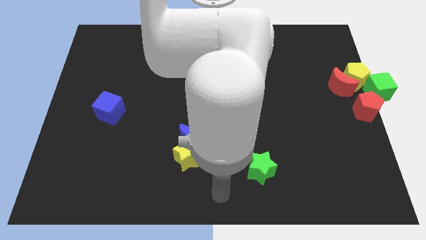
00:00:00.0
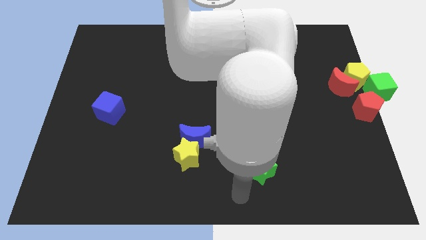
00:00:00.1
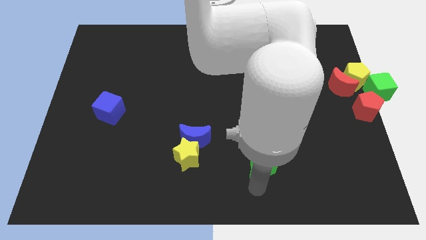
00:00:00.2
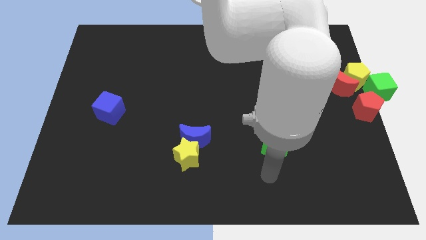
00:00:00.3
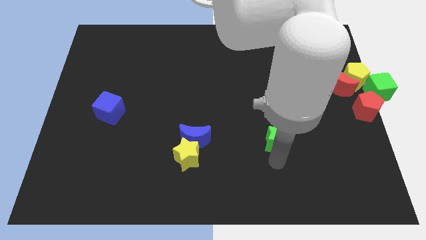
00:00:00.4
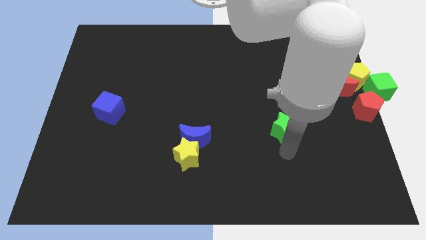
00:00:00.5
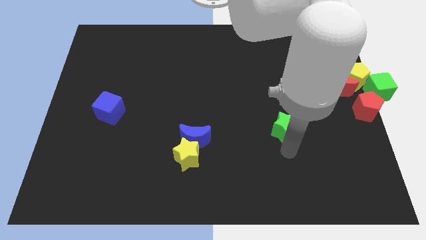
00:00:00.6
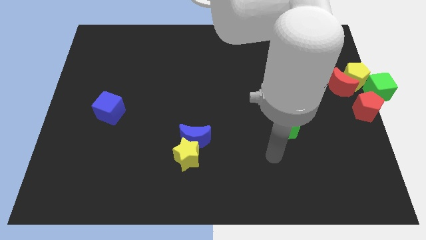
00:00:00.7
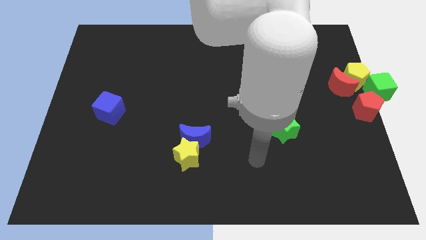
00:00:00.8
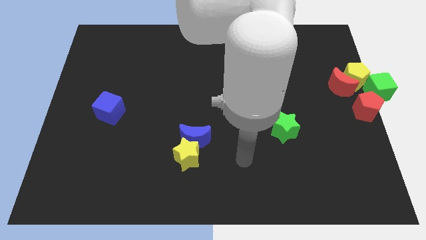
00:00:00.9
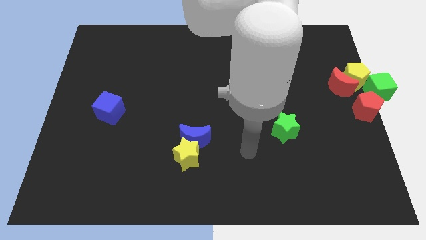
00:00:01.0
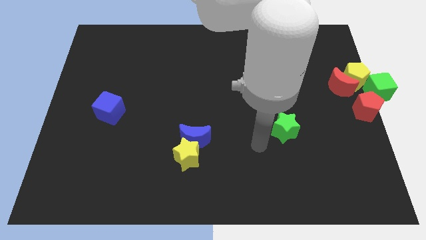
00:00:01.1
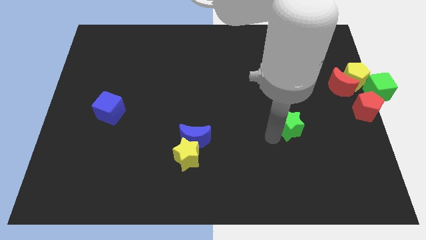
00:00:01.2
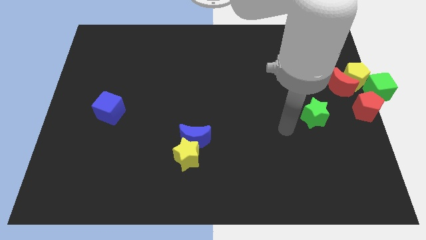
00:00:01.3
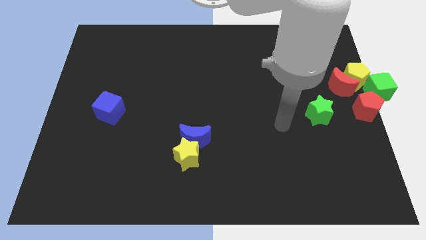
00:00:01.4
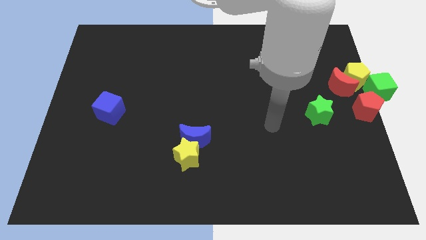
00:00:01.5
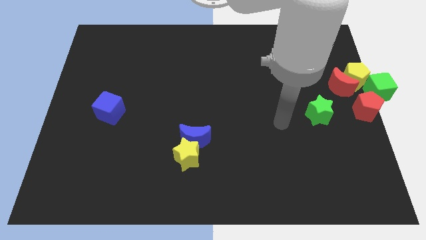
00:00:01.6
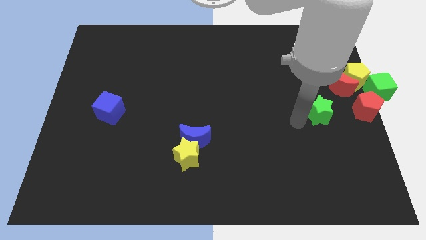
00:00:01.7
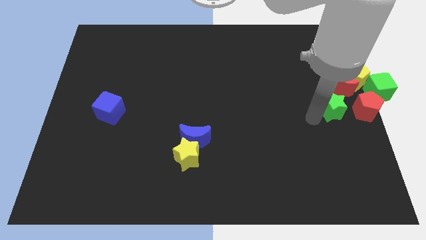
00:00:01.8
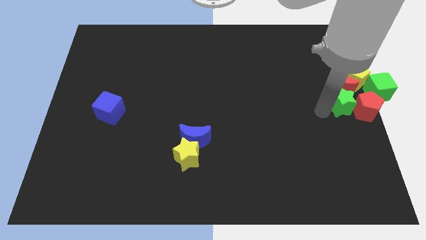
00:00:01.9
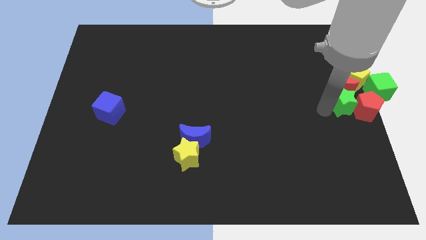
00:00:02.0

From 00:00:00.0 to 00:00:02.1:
slide green star into red blocks

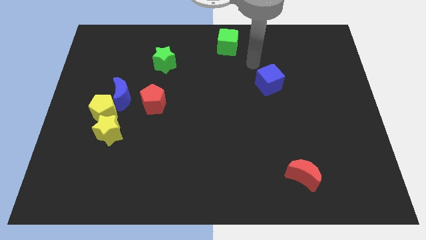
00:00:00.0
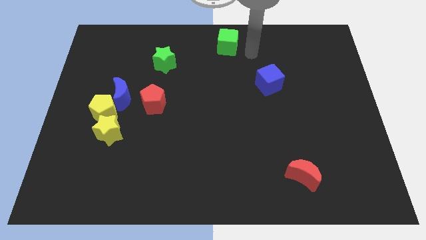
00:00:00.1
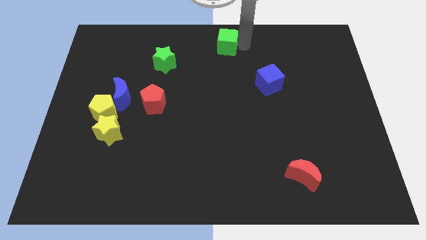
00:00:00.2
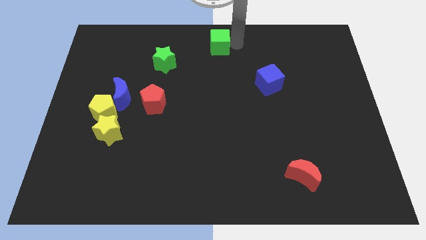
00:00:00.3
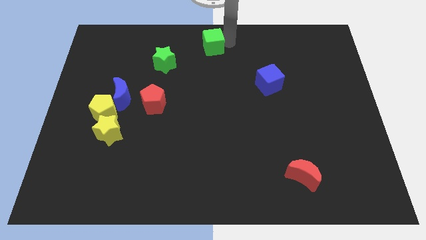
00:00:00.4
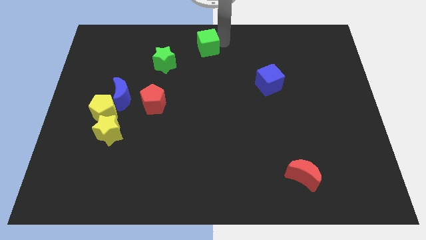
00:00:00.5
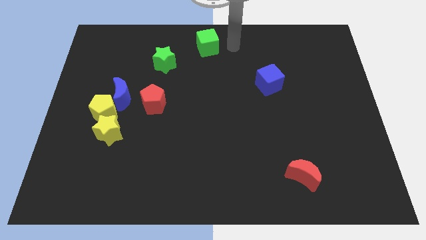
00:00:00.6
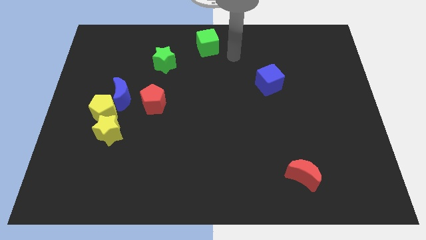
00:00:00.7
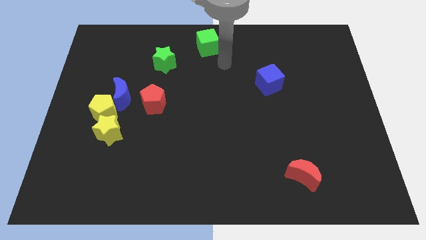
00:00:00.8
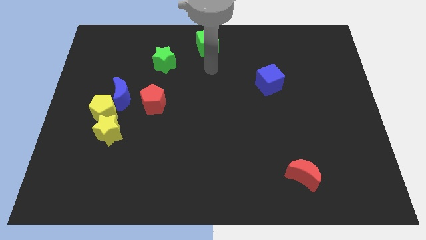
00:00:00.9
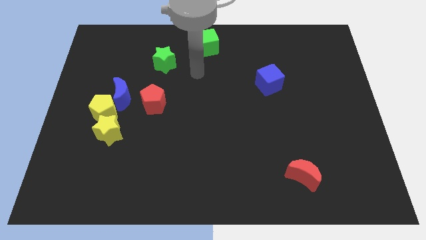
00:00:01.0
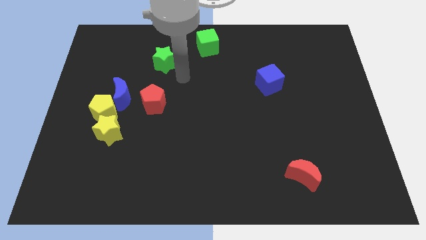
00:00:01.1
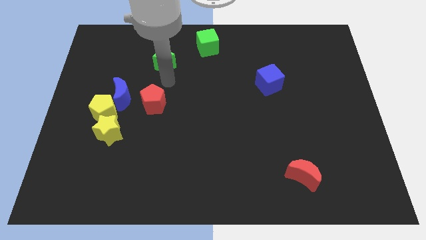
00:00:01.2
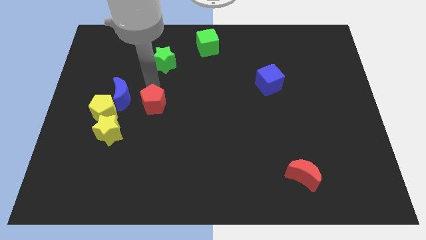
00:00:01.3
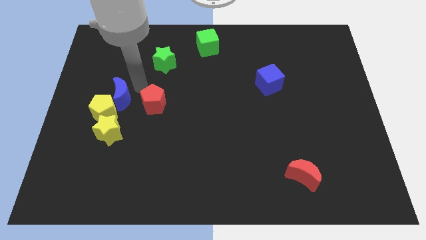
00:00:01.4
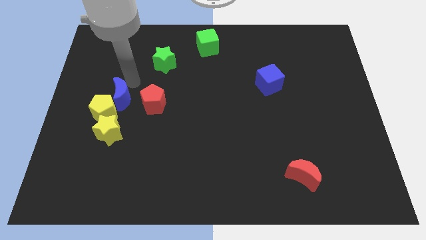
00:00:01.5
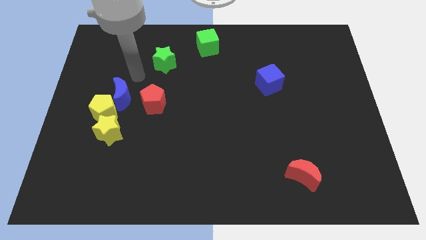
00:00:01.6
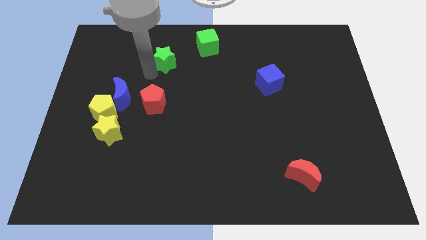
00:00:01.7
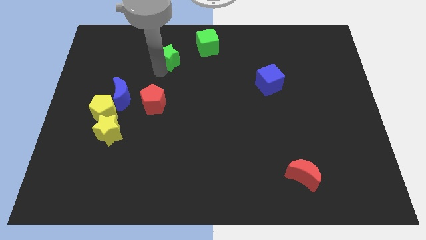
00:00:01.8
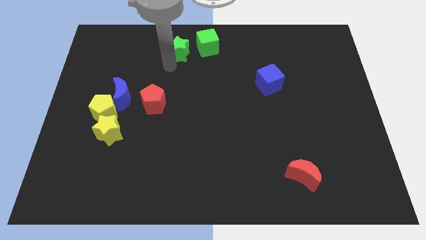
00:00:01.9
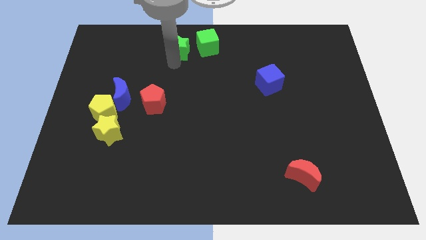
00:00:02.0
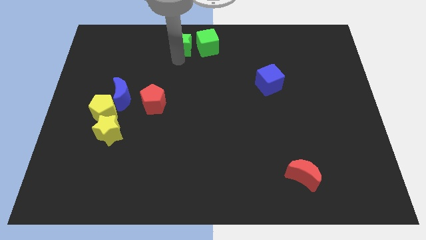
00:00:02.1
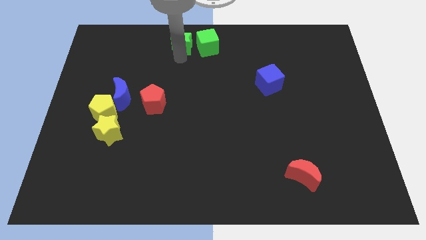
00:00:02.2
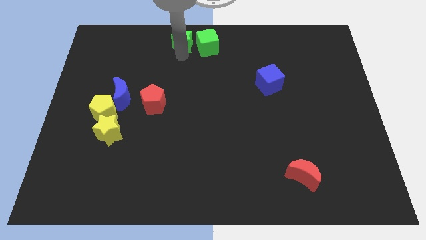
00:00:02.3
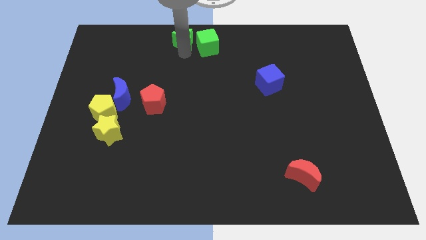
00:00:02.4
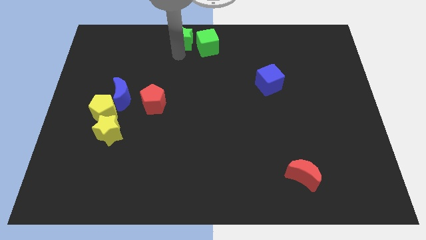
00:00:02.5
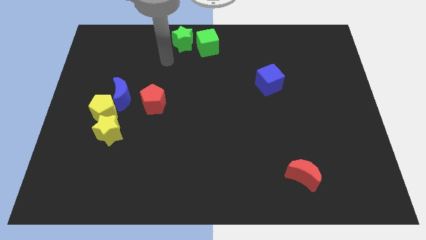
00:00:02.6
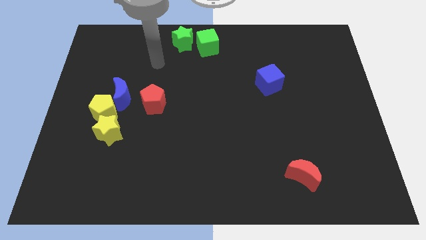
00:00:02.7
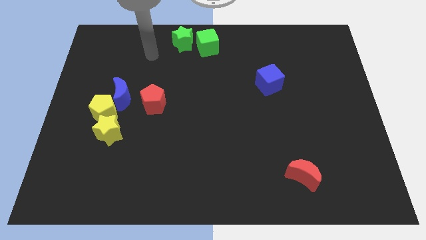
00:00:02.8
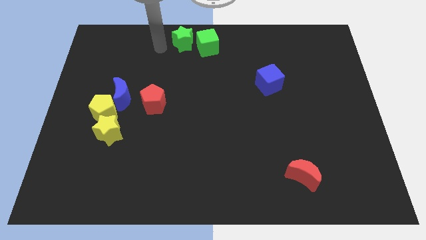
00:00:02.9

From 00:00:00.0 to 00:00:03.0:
place the green star to the left of the green cube

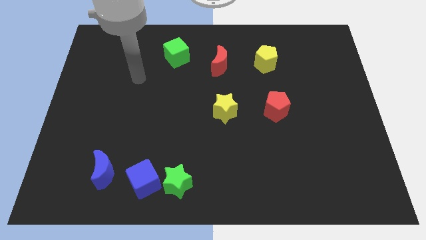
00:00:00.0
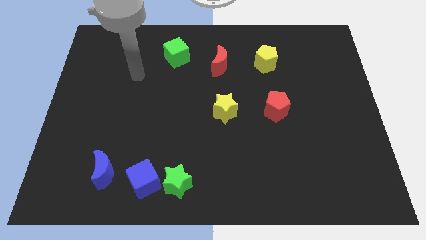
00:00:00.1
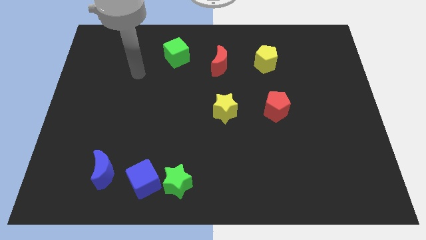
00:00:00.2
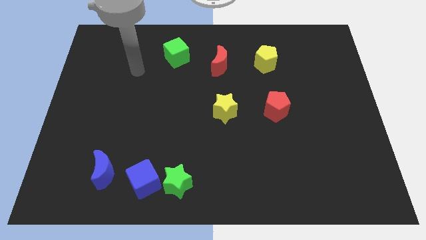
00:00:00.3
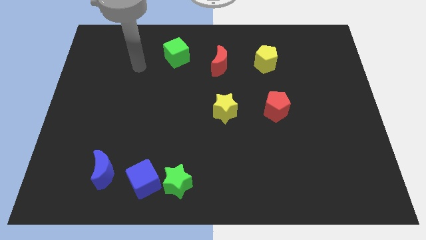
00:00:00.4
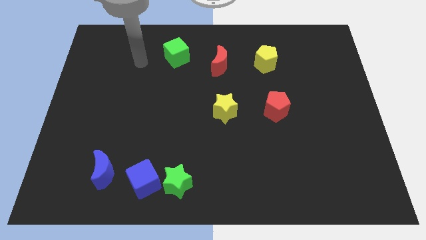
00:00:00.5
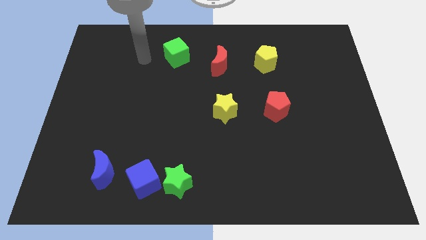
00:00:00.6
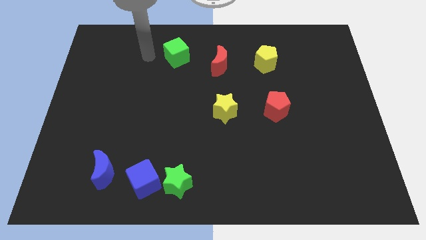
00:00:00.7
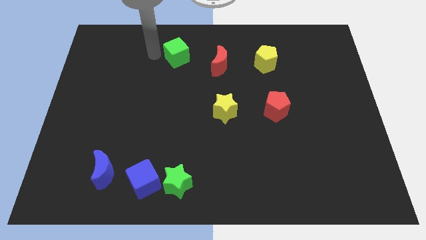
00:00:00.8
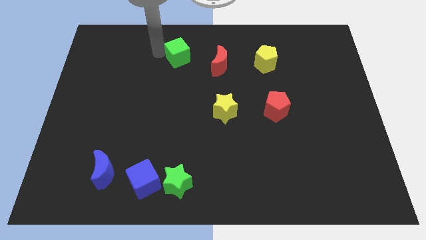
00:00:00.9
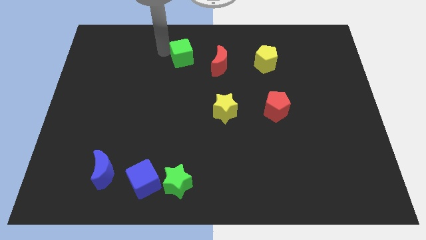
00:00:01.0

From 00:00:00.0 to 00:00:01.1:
touch the green cube

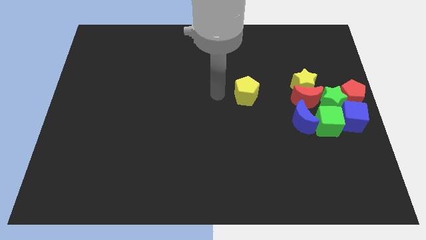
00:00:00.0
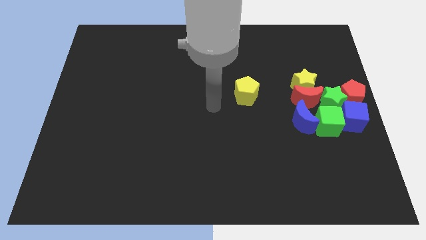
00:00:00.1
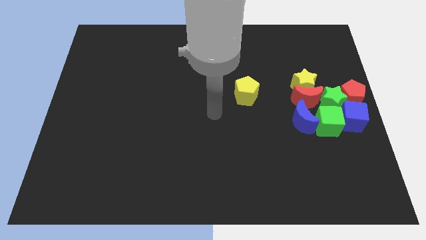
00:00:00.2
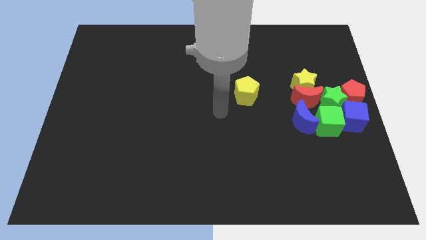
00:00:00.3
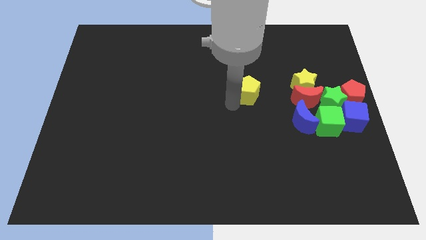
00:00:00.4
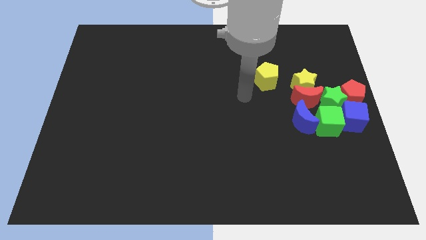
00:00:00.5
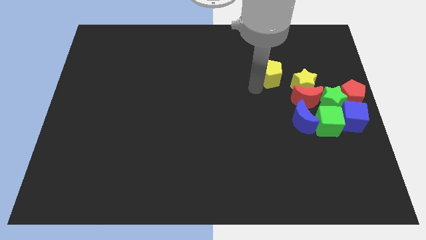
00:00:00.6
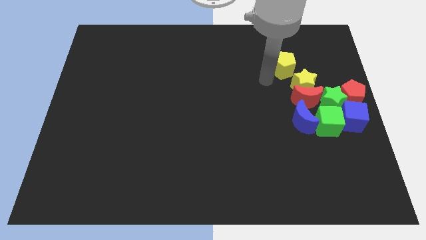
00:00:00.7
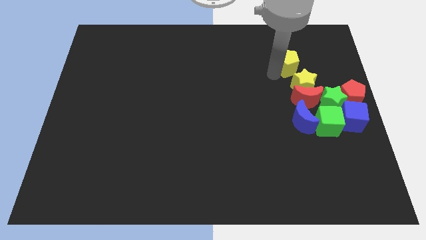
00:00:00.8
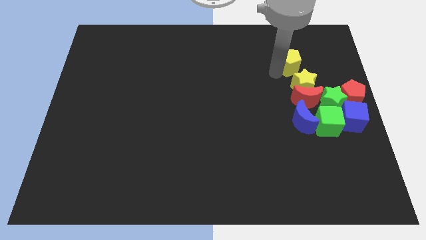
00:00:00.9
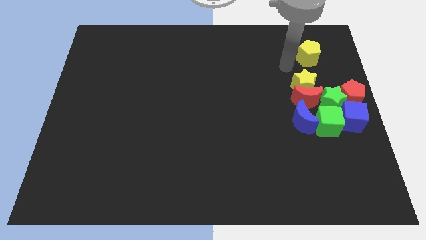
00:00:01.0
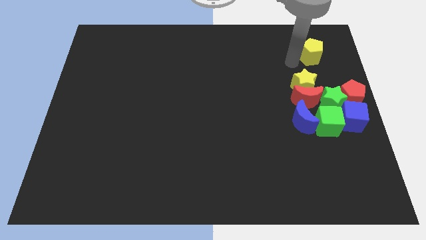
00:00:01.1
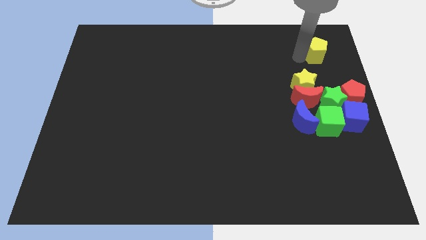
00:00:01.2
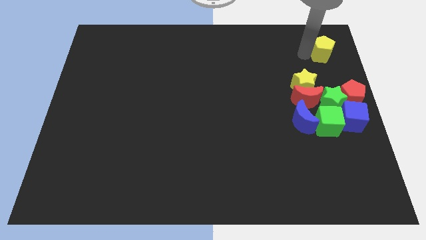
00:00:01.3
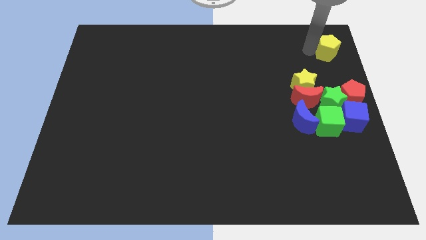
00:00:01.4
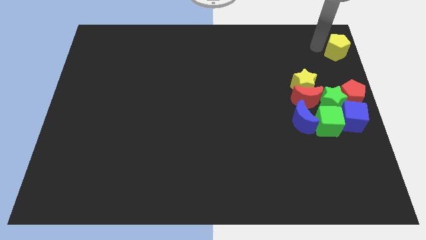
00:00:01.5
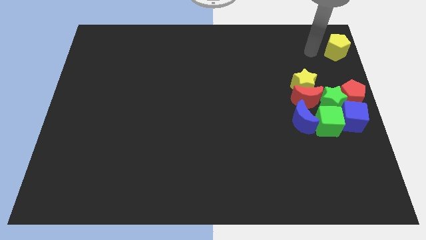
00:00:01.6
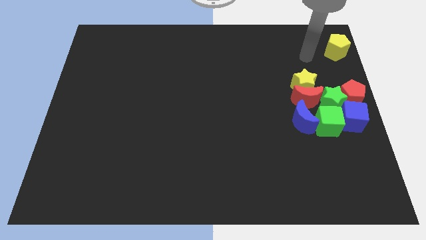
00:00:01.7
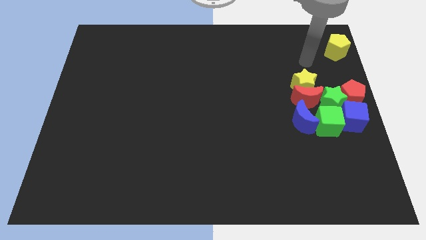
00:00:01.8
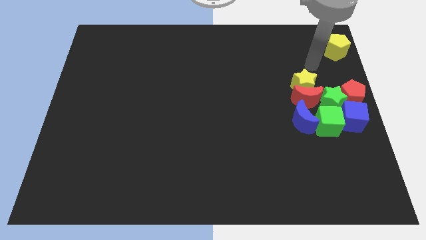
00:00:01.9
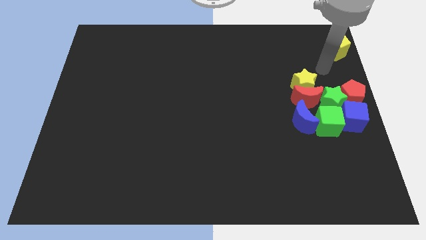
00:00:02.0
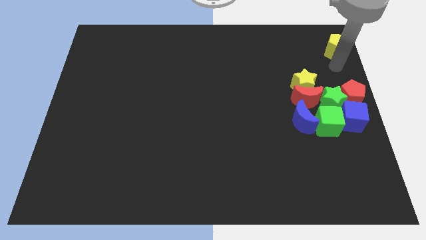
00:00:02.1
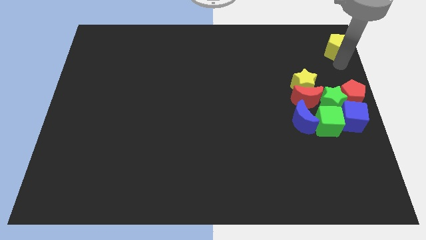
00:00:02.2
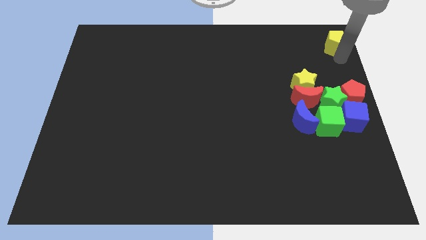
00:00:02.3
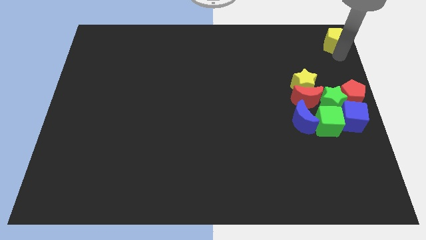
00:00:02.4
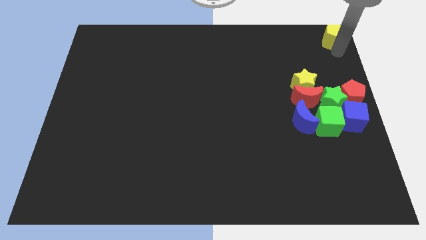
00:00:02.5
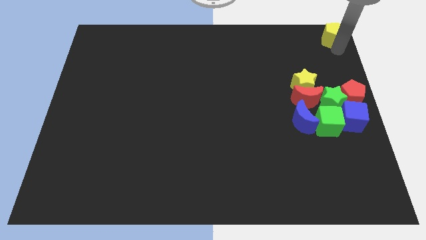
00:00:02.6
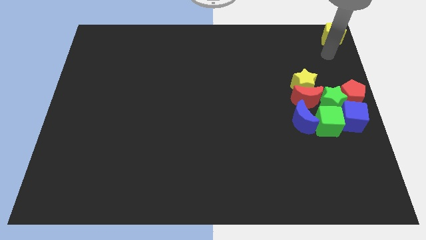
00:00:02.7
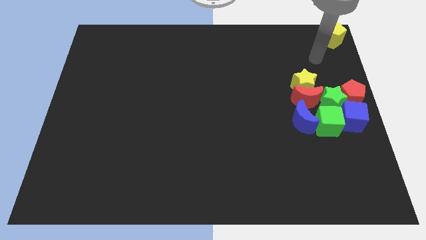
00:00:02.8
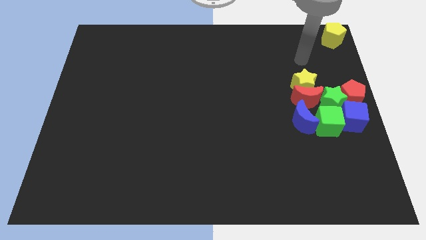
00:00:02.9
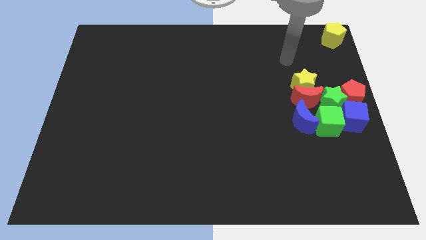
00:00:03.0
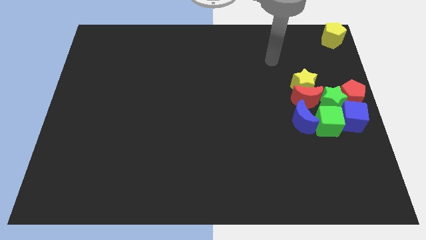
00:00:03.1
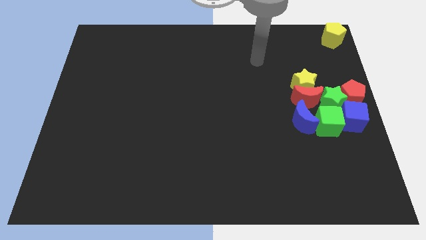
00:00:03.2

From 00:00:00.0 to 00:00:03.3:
move yellow pentagon to top right corner
